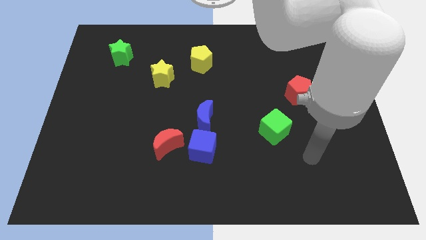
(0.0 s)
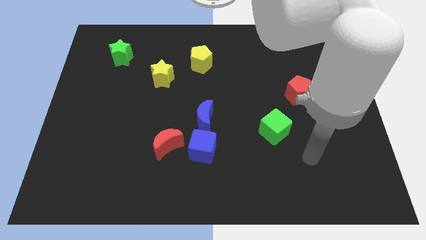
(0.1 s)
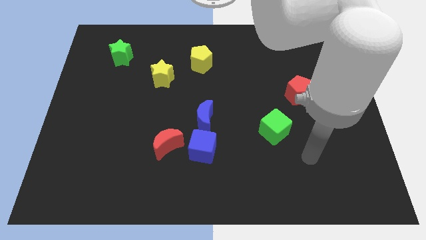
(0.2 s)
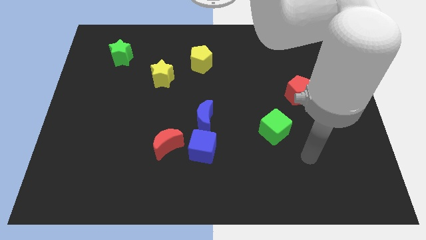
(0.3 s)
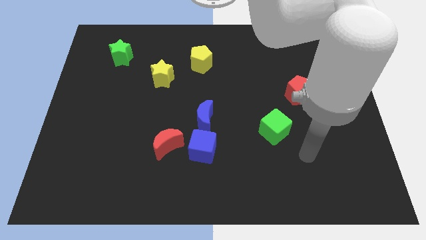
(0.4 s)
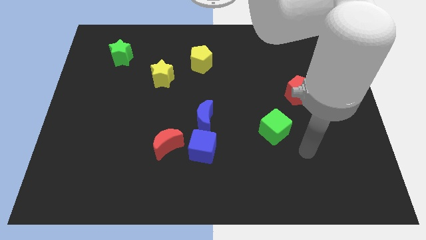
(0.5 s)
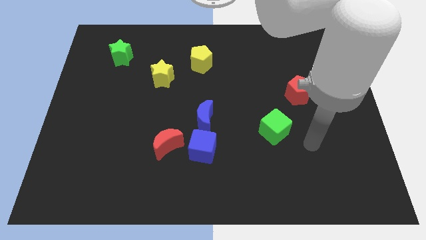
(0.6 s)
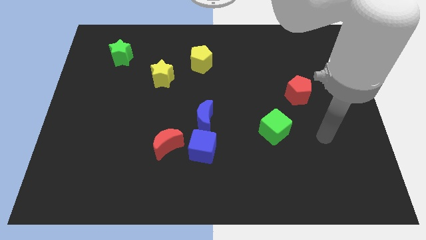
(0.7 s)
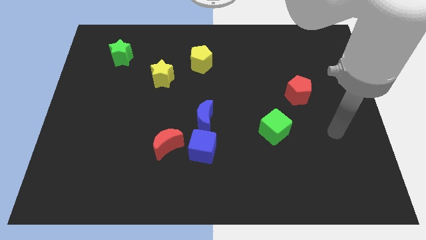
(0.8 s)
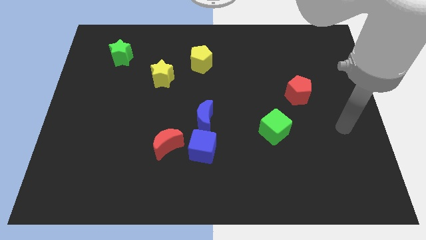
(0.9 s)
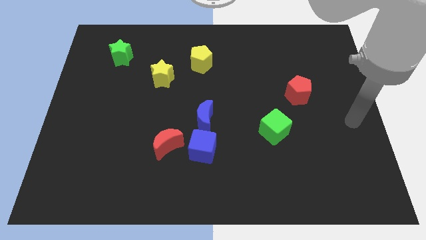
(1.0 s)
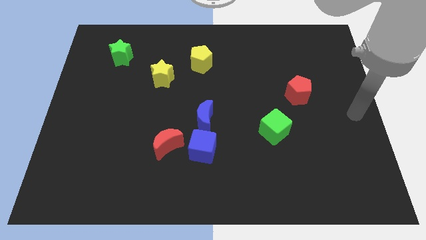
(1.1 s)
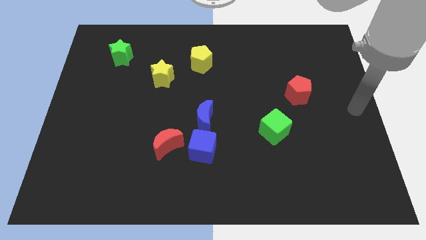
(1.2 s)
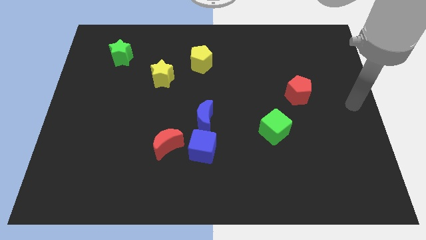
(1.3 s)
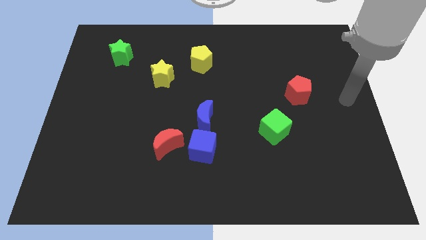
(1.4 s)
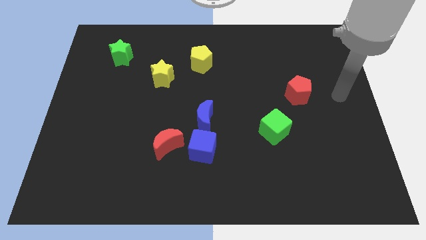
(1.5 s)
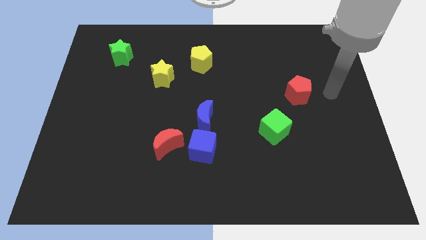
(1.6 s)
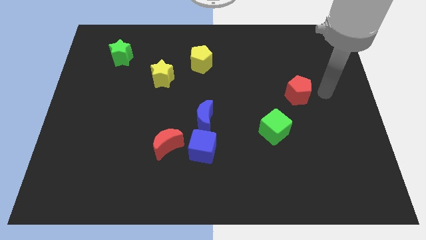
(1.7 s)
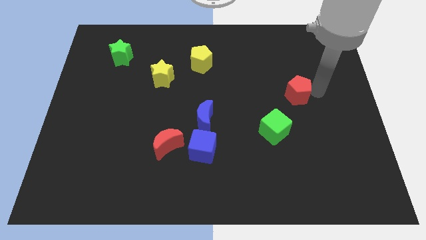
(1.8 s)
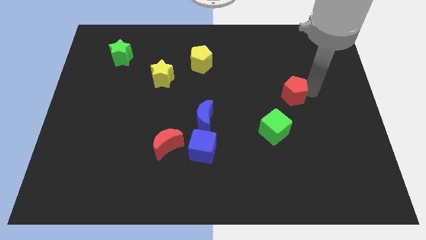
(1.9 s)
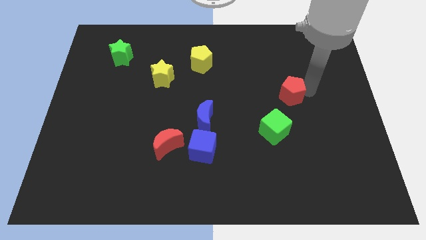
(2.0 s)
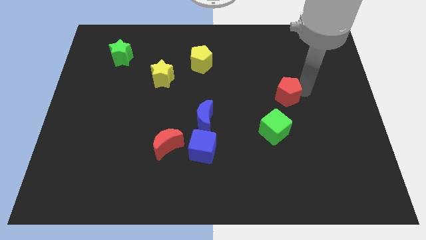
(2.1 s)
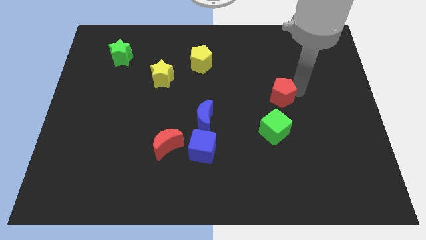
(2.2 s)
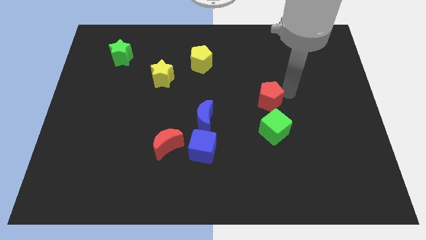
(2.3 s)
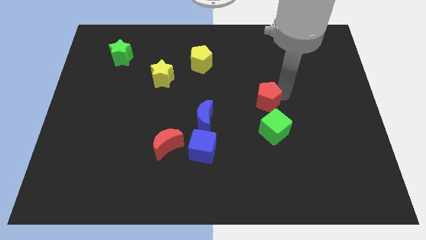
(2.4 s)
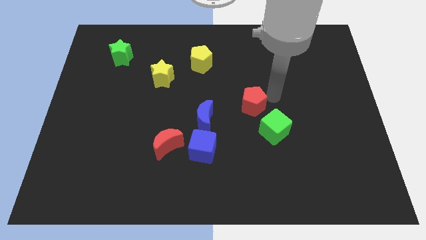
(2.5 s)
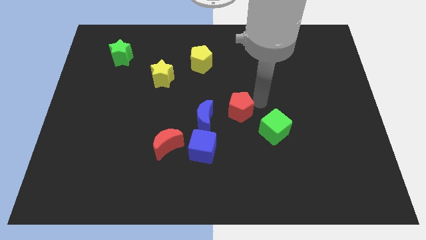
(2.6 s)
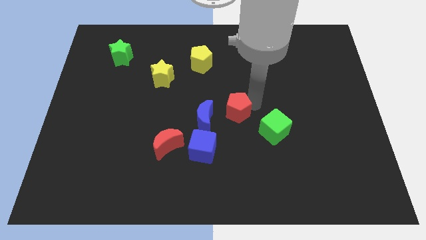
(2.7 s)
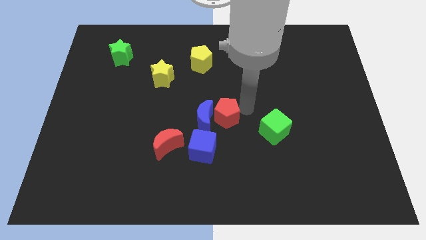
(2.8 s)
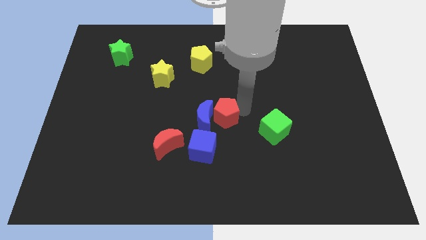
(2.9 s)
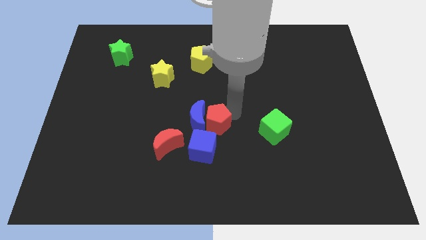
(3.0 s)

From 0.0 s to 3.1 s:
drag the red pentagon into the right side of the blue moon

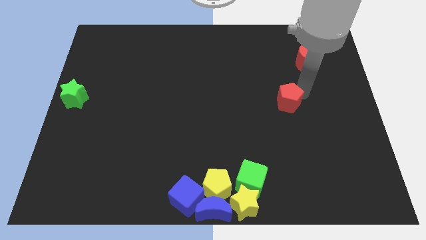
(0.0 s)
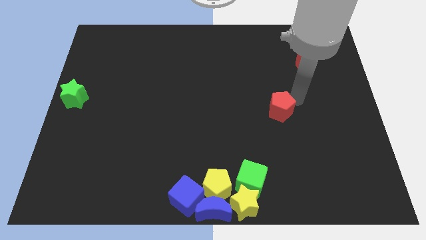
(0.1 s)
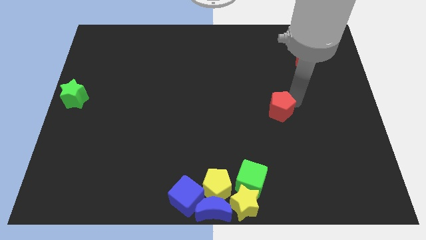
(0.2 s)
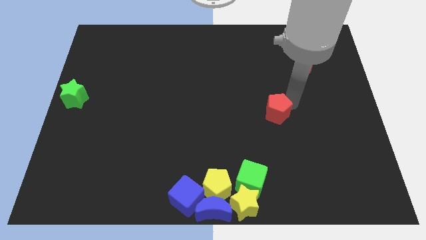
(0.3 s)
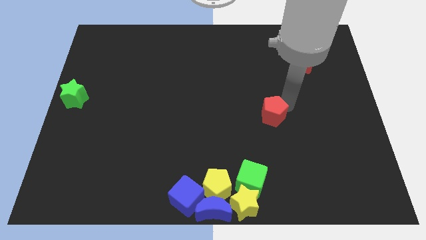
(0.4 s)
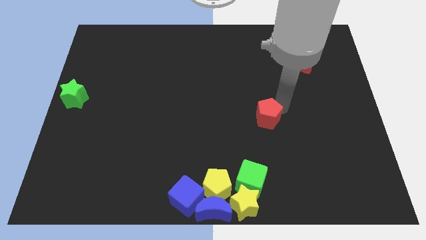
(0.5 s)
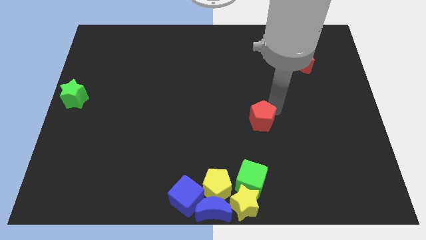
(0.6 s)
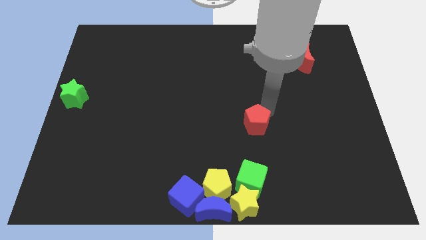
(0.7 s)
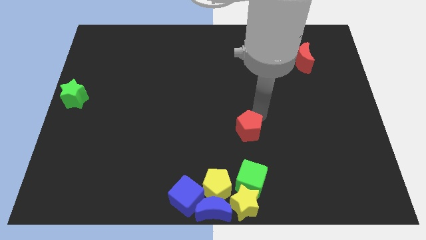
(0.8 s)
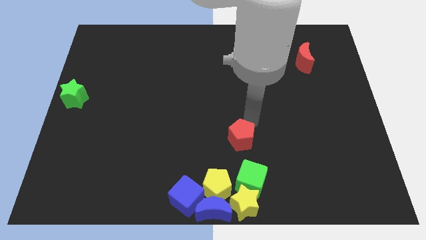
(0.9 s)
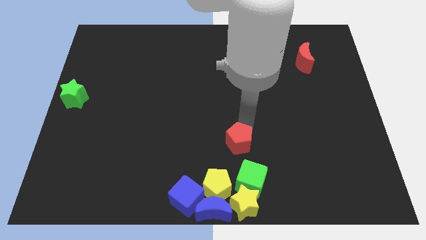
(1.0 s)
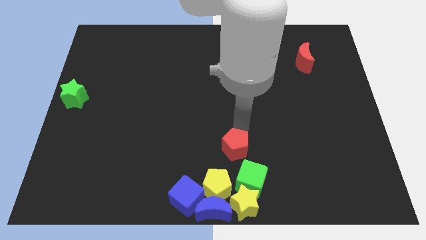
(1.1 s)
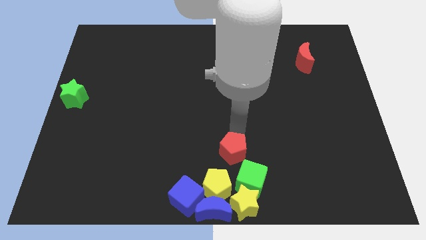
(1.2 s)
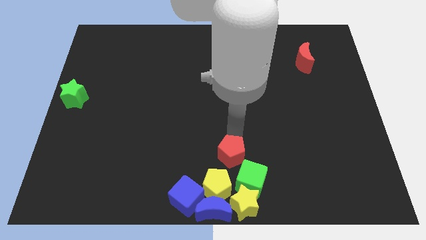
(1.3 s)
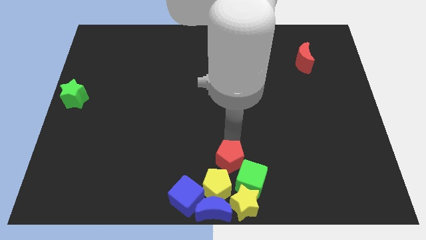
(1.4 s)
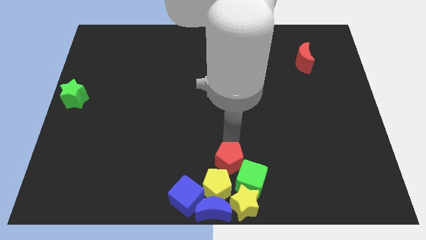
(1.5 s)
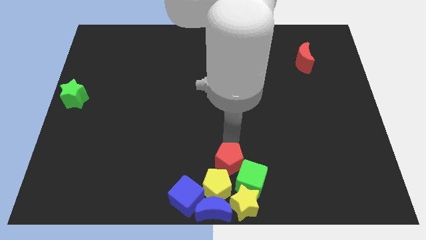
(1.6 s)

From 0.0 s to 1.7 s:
place the red pentagon above the yellow pentagon

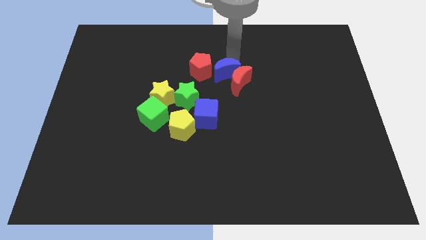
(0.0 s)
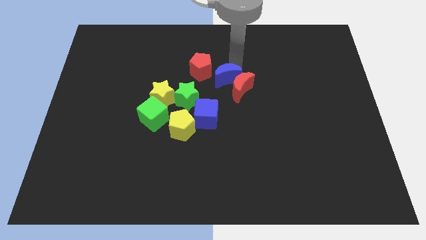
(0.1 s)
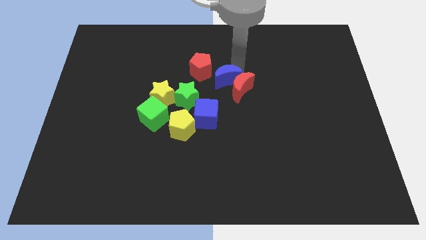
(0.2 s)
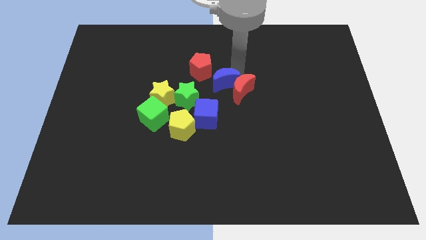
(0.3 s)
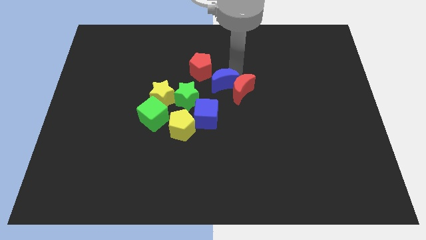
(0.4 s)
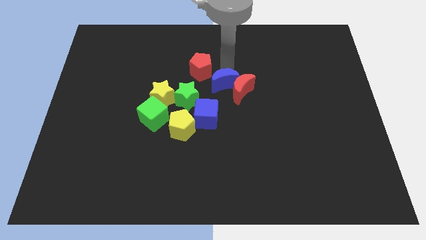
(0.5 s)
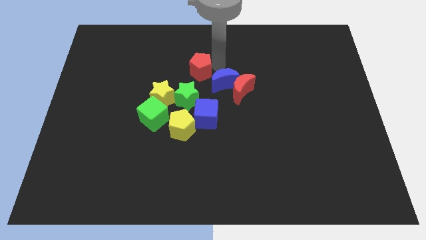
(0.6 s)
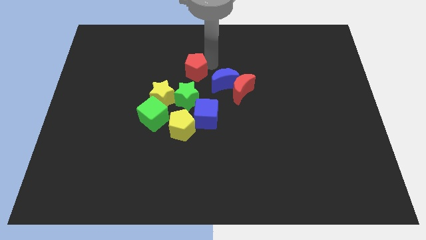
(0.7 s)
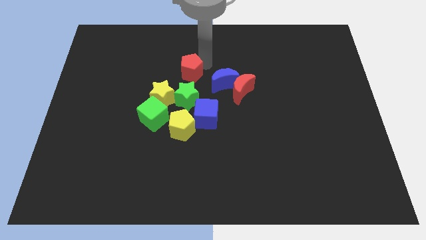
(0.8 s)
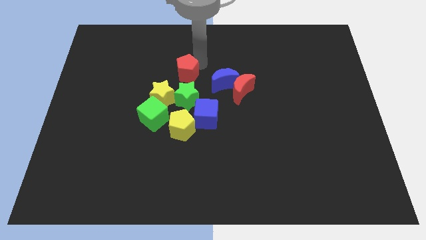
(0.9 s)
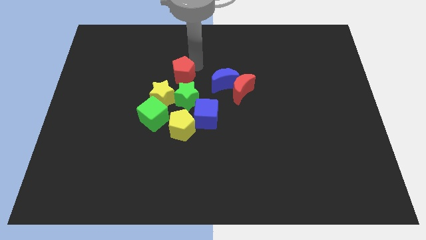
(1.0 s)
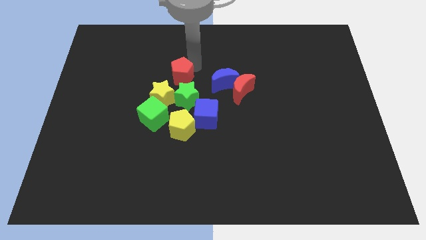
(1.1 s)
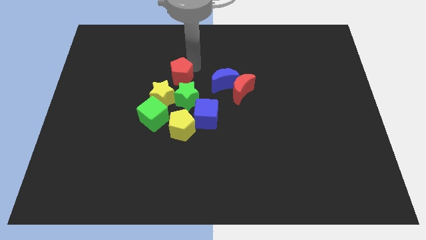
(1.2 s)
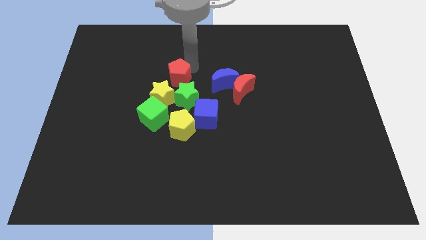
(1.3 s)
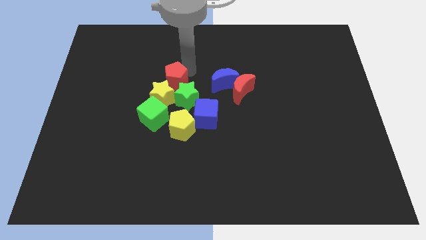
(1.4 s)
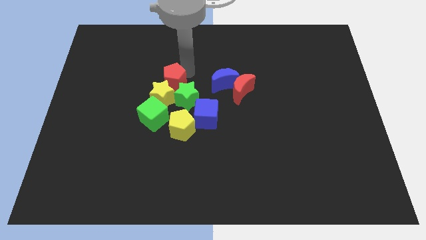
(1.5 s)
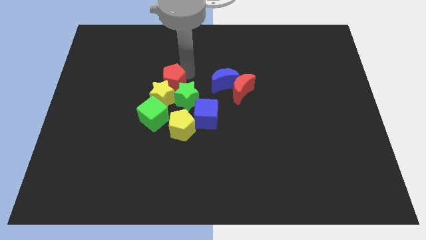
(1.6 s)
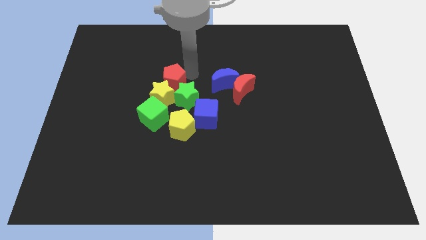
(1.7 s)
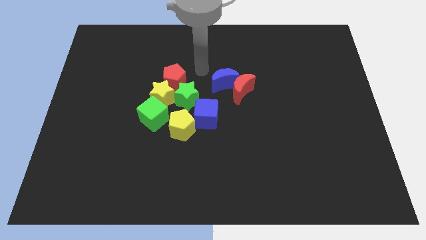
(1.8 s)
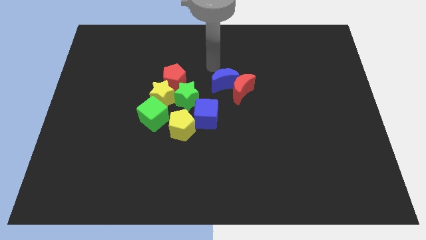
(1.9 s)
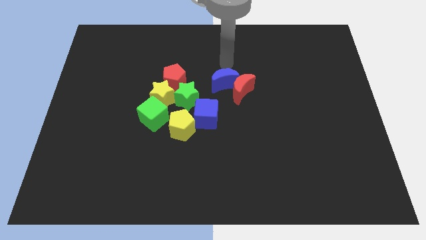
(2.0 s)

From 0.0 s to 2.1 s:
slide red pentagon into yellow and green stars

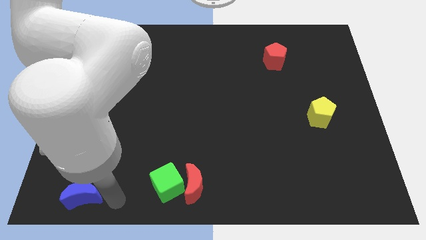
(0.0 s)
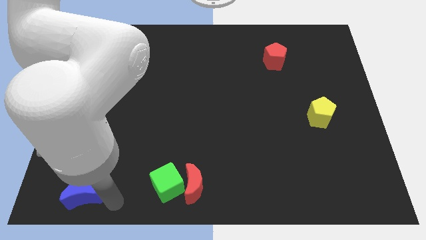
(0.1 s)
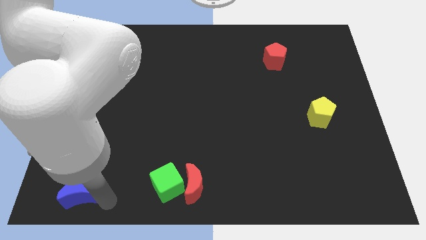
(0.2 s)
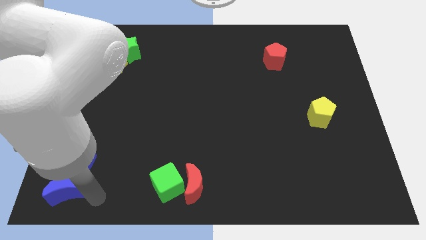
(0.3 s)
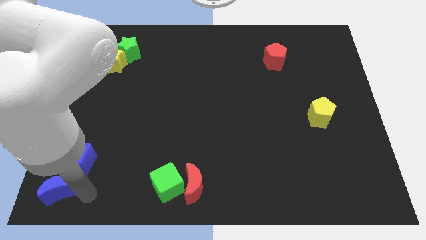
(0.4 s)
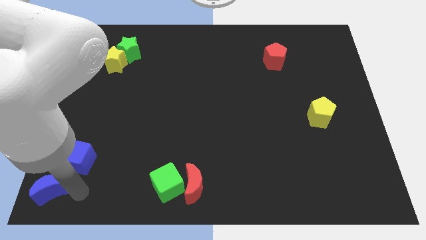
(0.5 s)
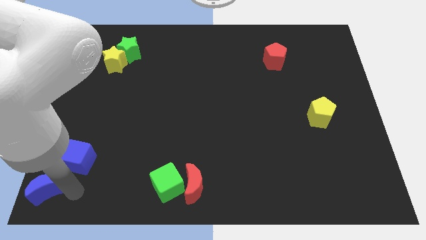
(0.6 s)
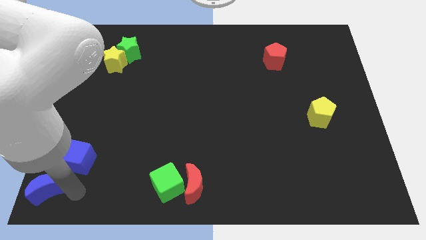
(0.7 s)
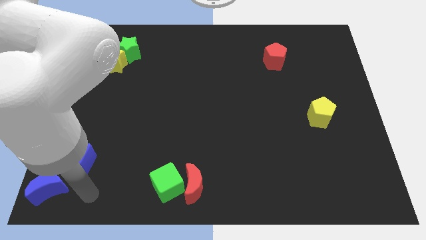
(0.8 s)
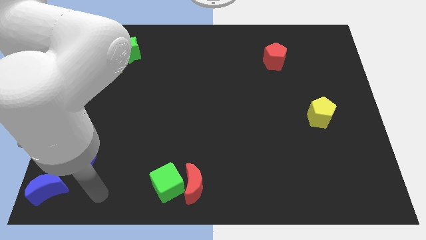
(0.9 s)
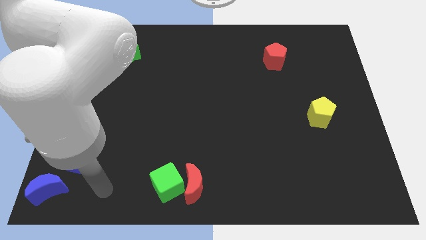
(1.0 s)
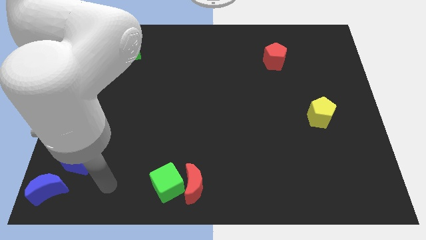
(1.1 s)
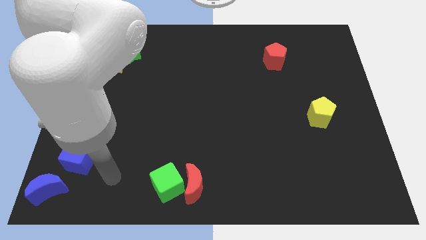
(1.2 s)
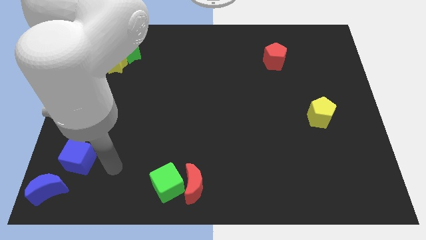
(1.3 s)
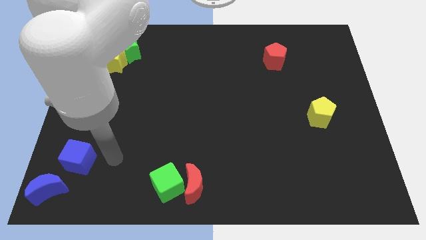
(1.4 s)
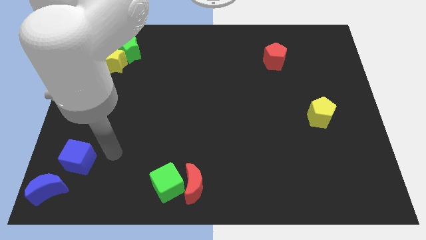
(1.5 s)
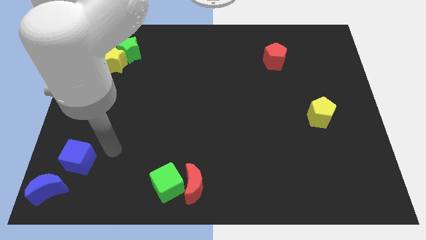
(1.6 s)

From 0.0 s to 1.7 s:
push the blue moon to the bottom left side of the board

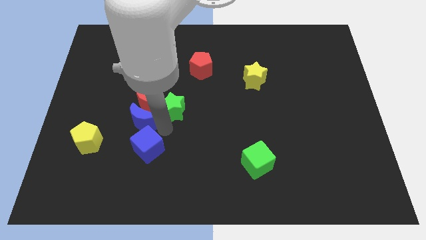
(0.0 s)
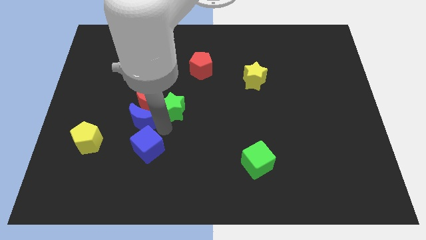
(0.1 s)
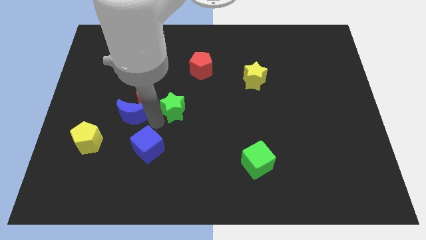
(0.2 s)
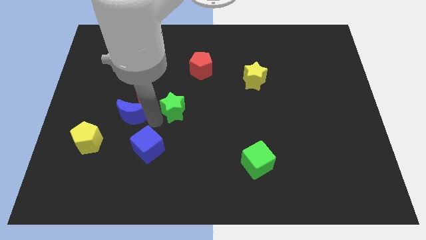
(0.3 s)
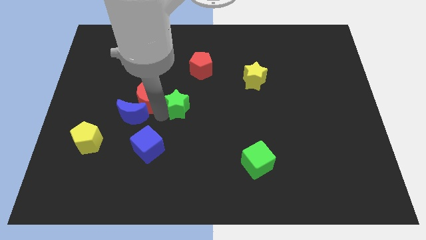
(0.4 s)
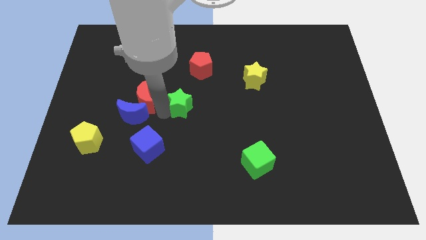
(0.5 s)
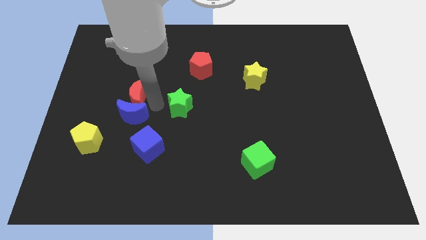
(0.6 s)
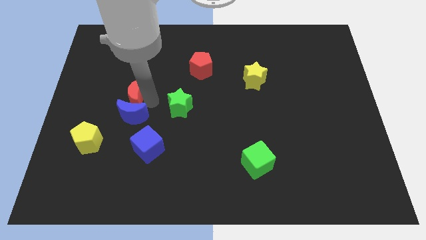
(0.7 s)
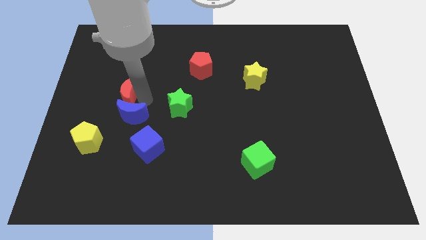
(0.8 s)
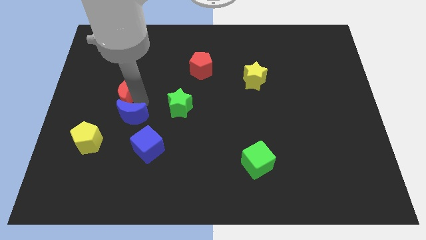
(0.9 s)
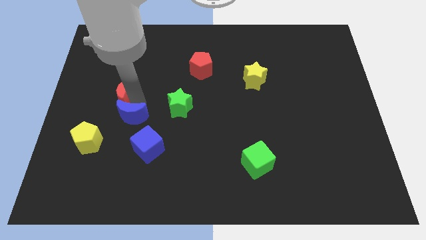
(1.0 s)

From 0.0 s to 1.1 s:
move the red crescent slightly to the left
